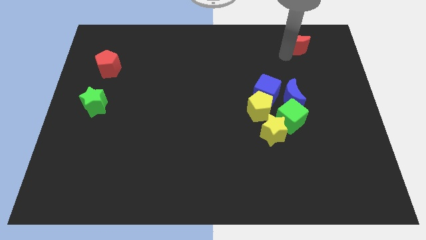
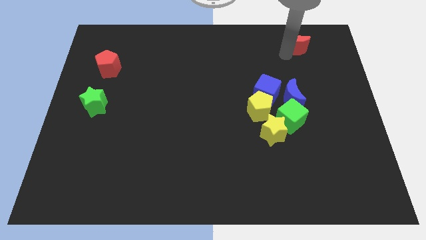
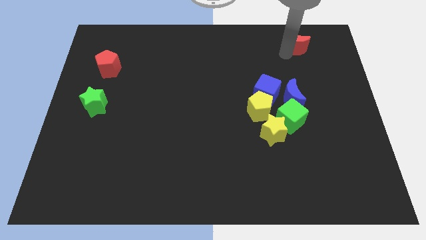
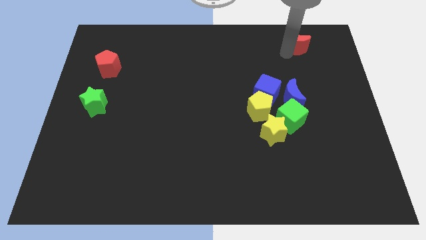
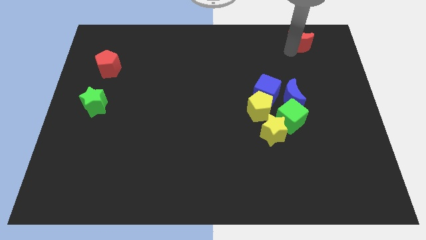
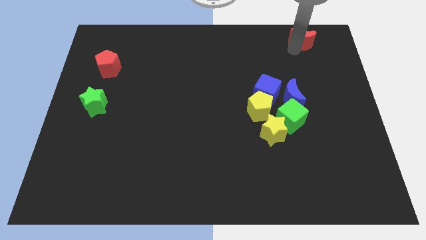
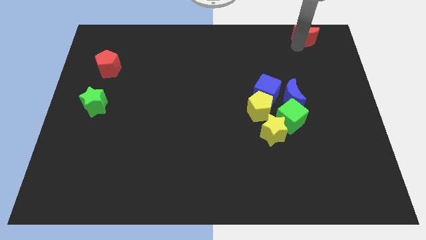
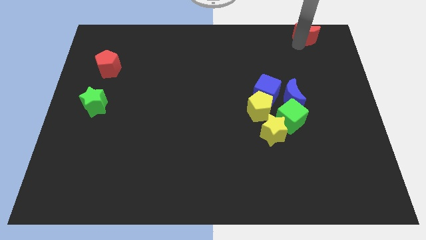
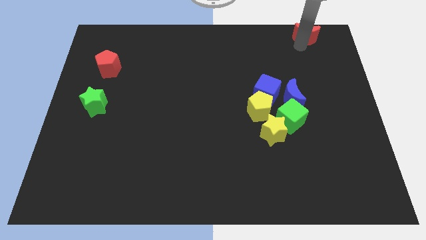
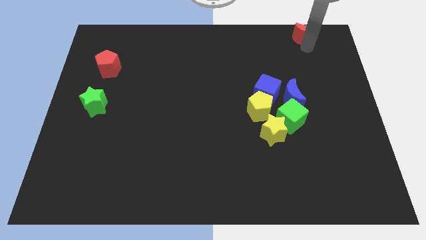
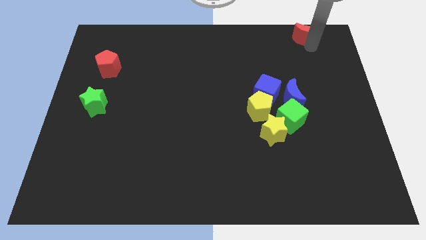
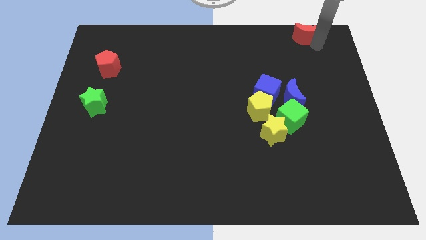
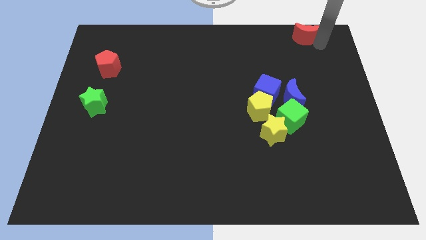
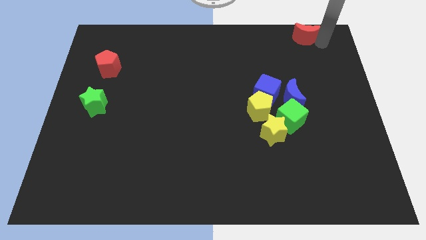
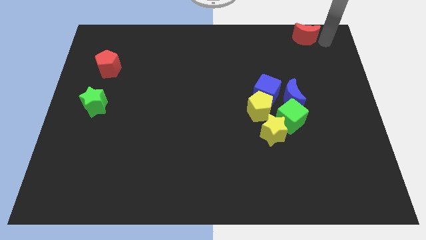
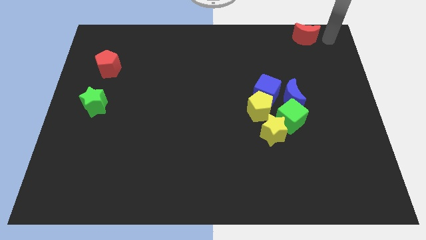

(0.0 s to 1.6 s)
place red moon at the top right of the board

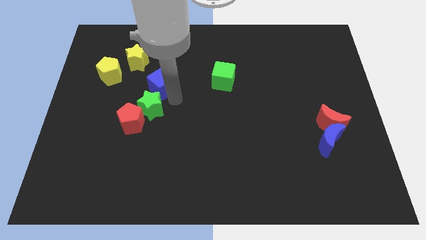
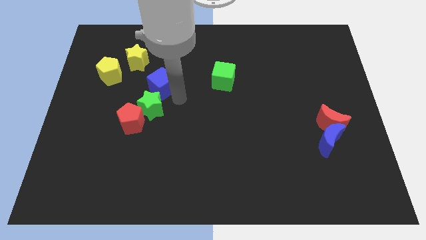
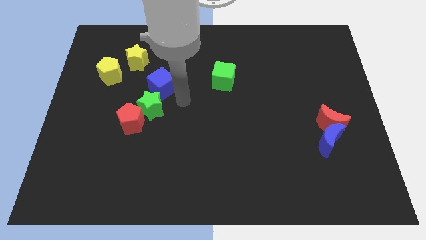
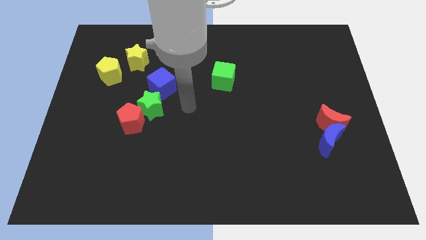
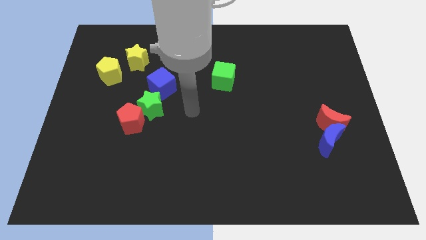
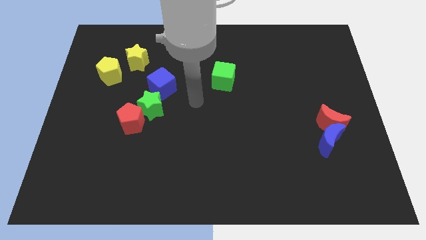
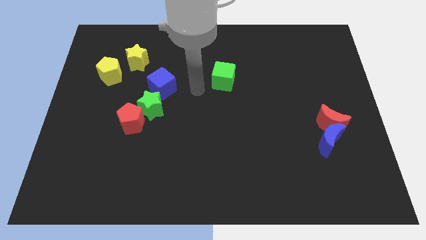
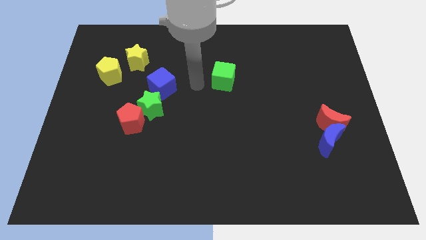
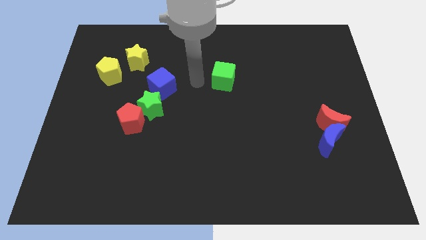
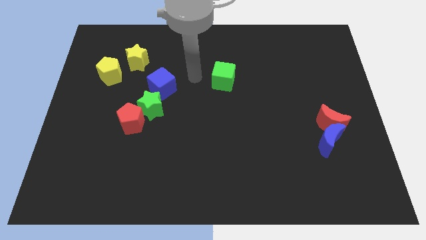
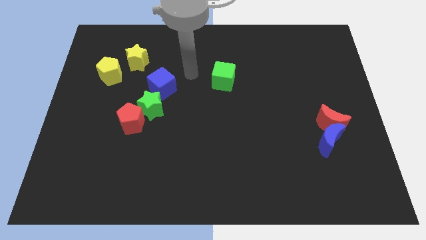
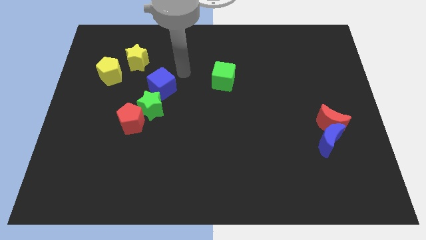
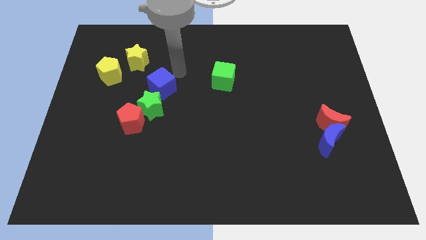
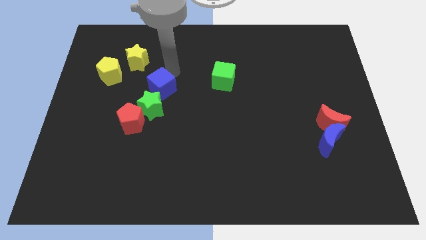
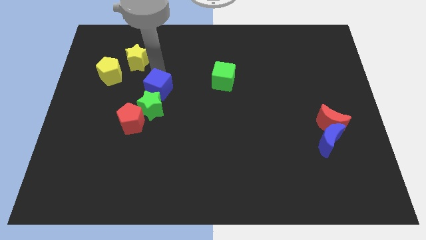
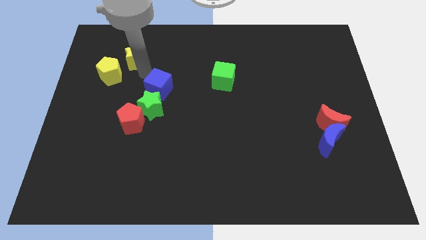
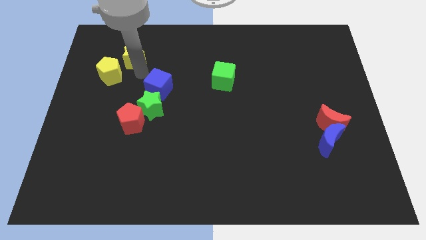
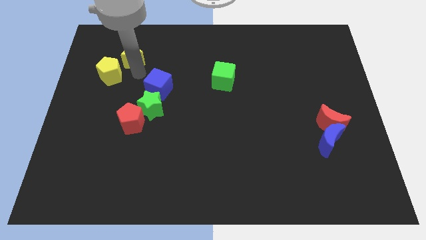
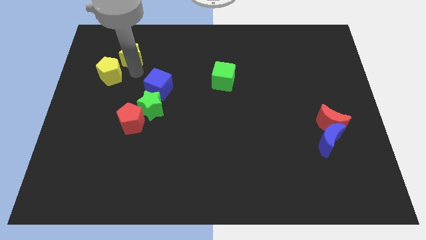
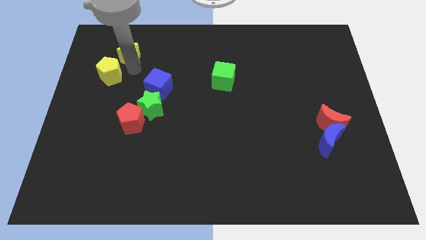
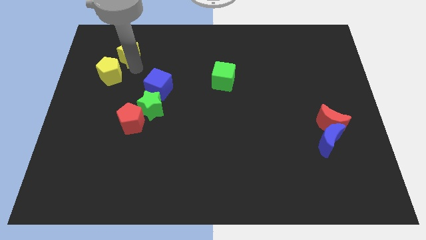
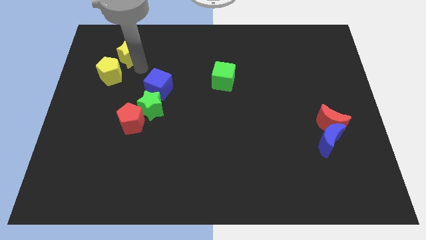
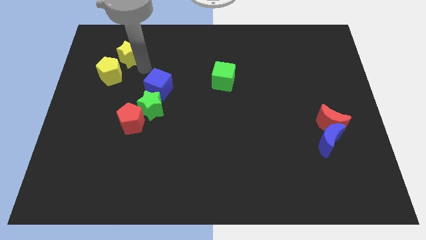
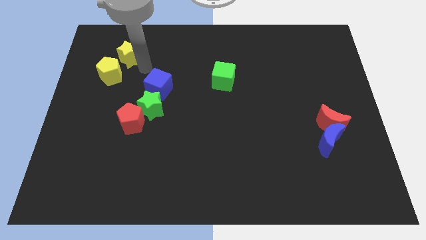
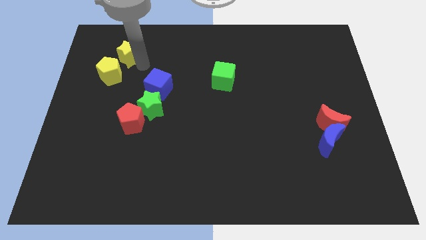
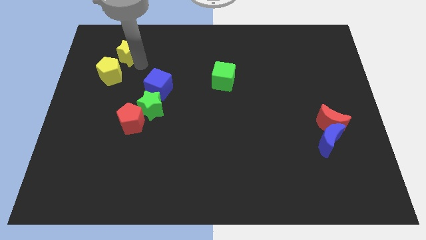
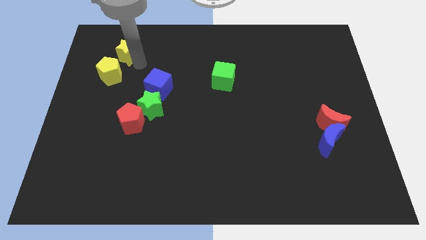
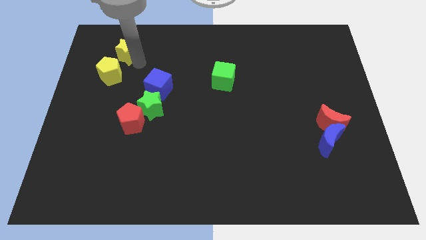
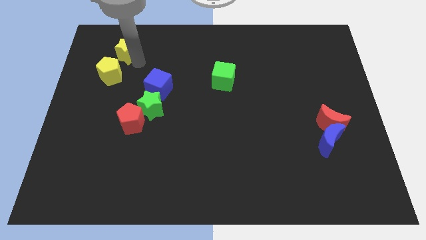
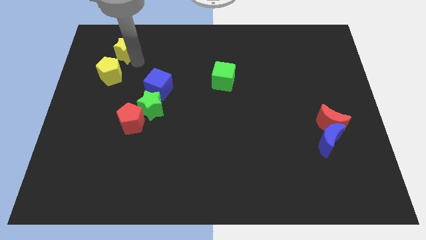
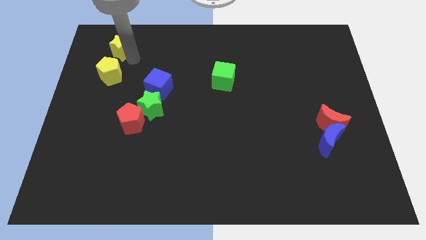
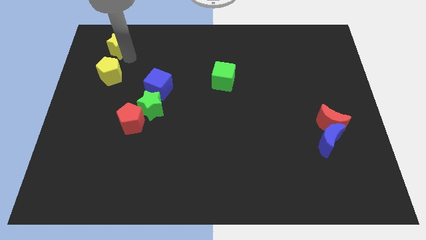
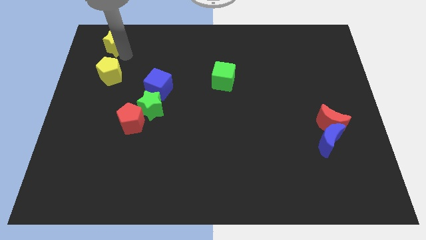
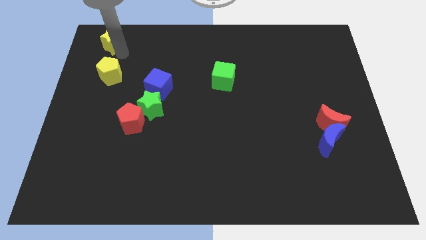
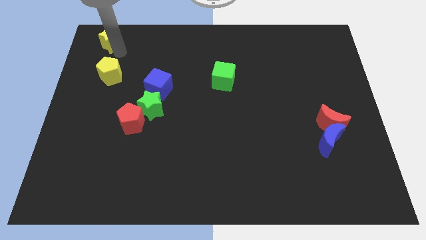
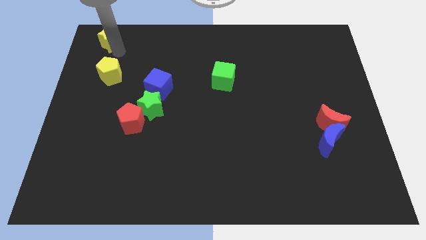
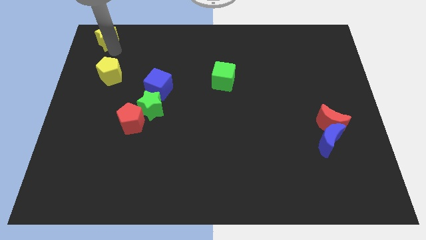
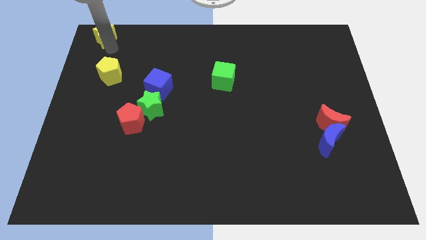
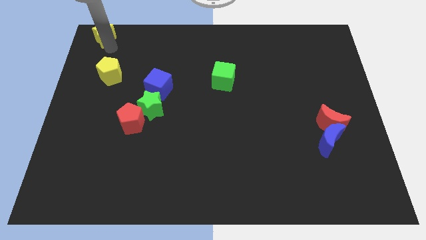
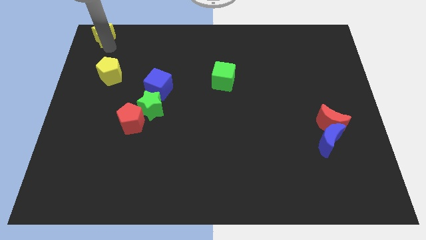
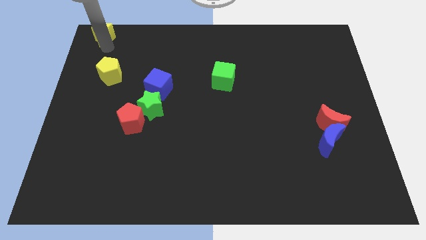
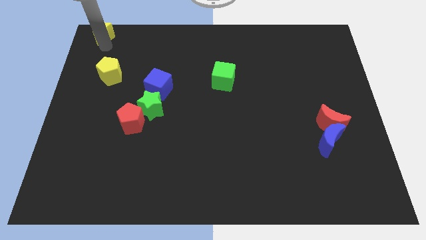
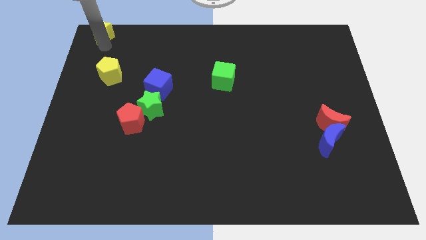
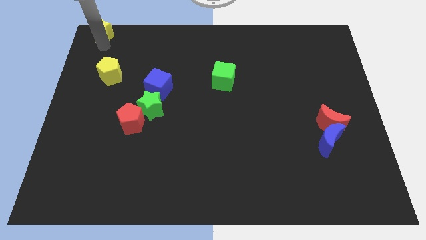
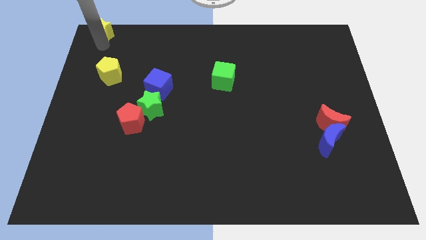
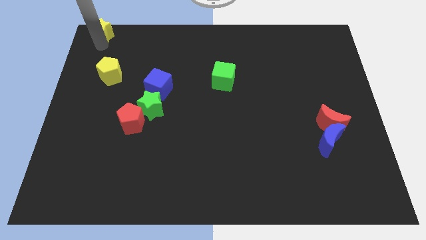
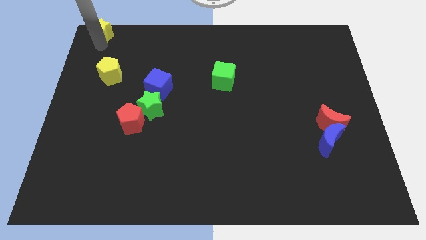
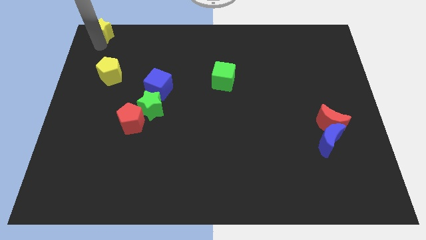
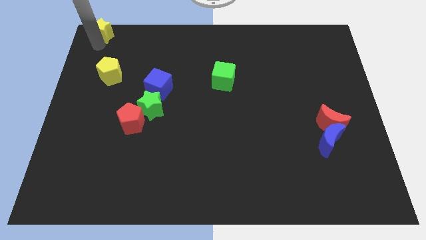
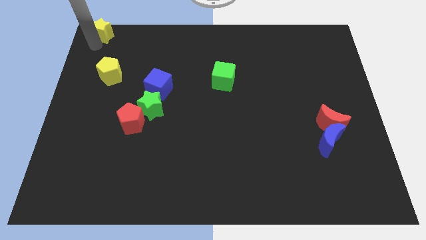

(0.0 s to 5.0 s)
place the yellow star at the top of yellow pentagon

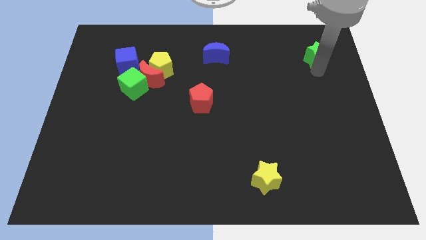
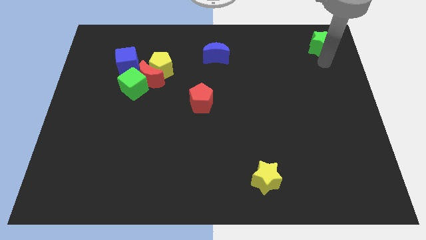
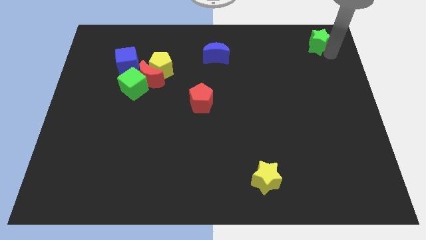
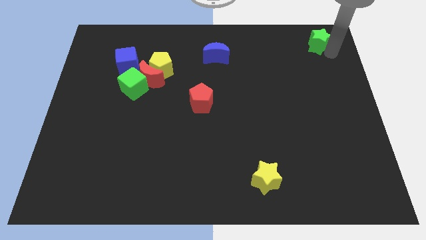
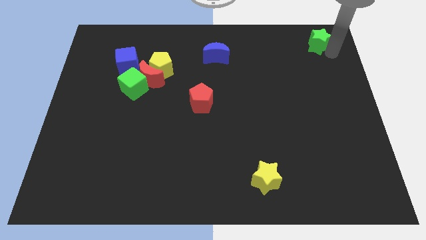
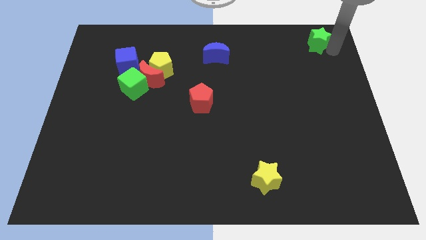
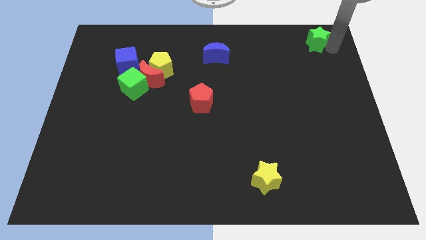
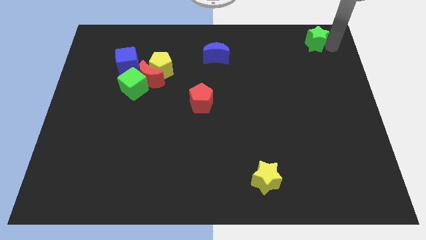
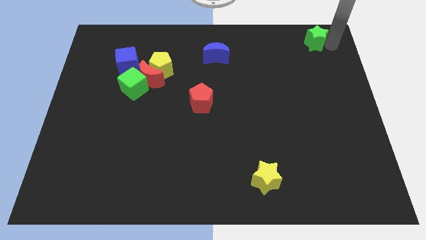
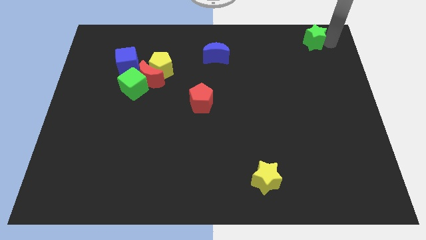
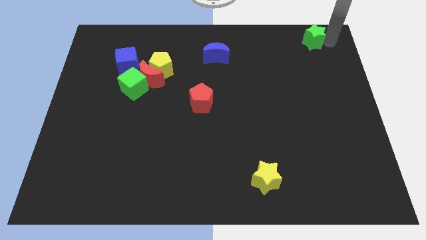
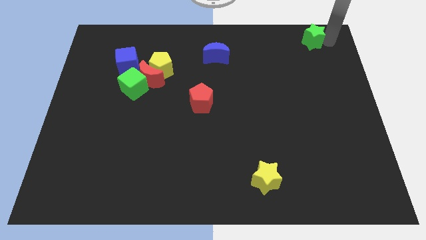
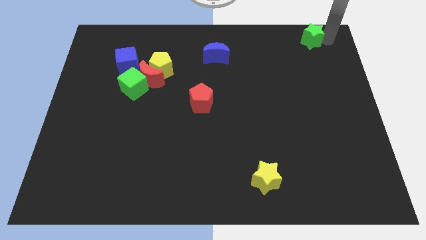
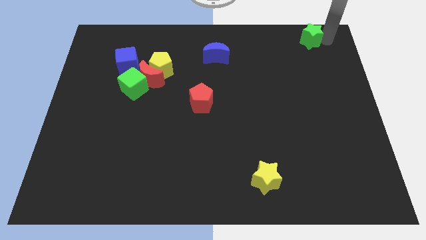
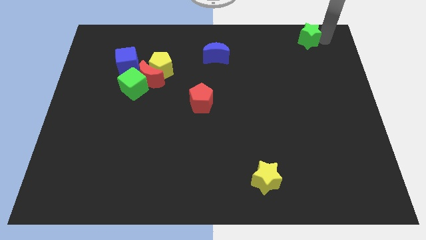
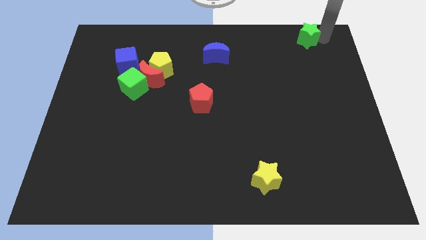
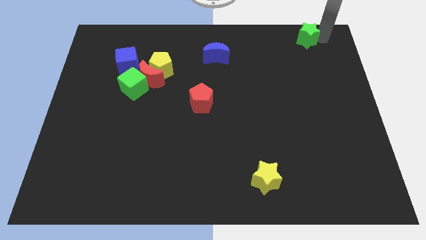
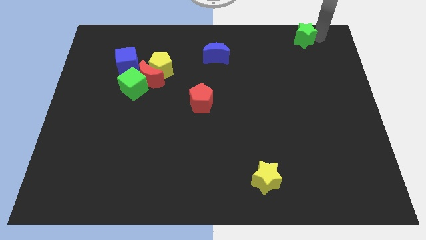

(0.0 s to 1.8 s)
push the green star upwards

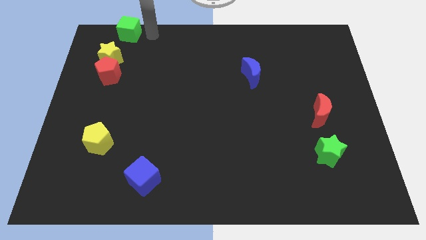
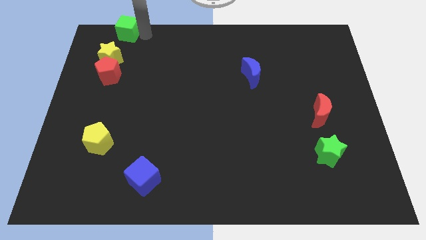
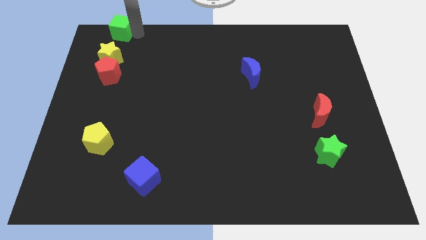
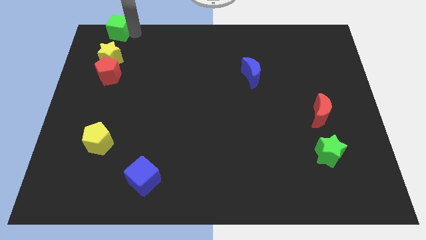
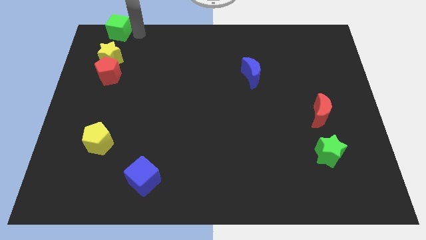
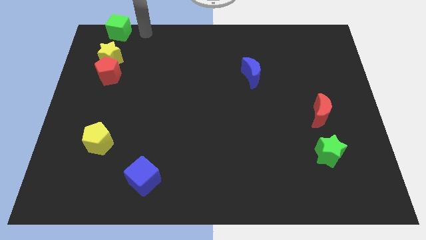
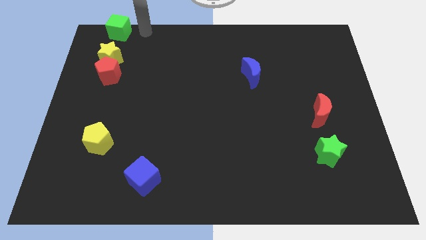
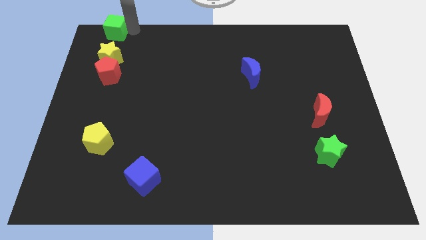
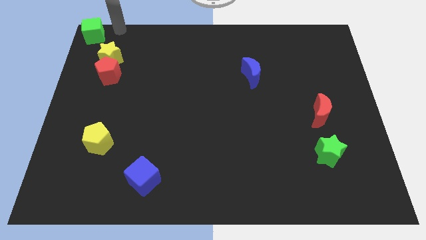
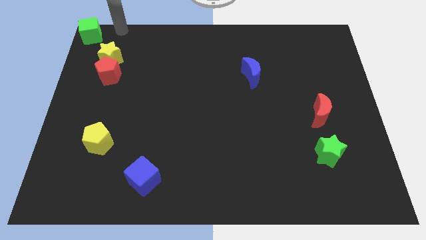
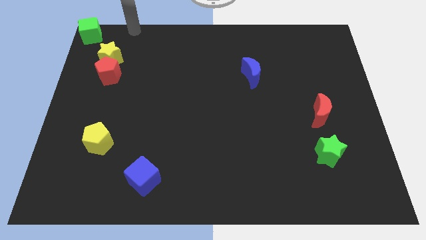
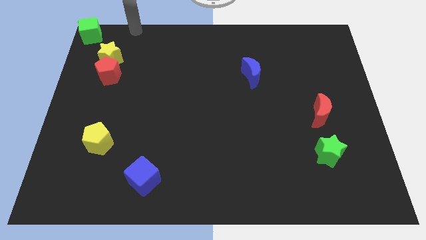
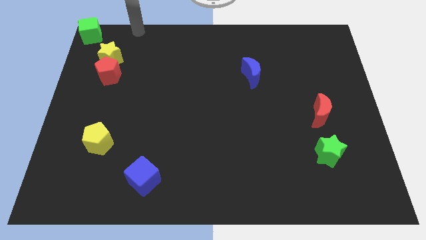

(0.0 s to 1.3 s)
push the green cube to the top left corner of board
